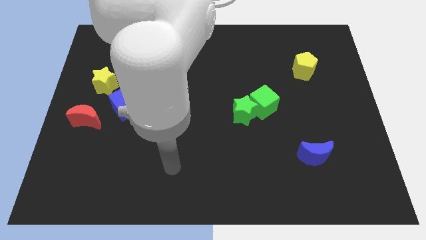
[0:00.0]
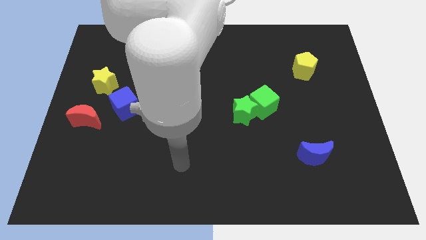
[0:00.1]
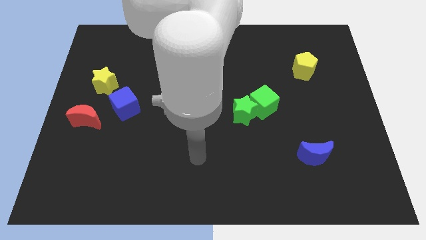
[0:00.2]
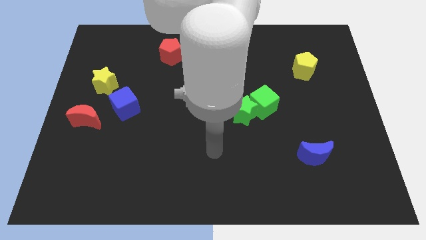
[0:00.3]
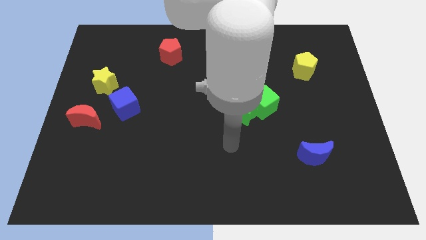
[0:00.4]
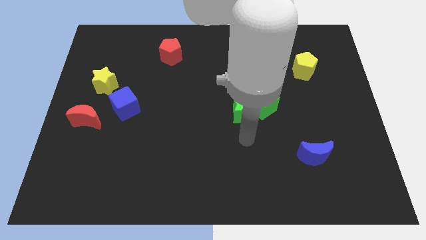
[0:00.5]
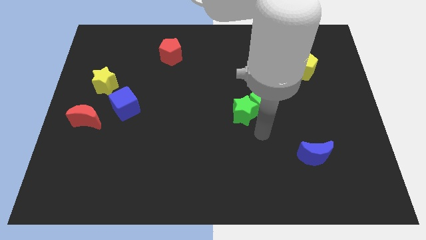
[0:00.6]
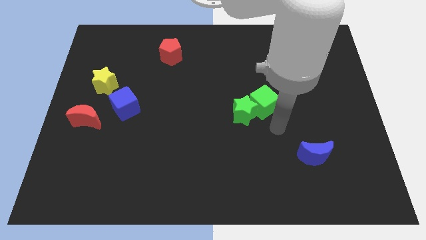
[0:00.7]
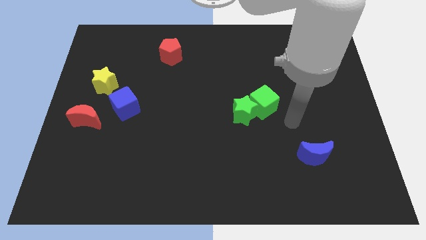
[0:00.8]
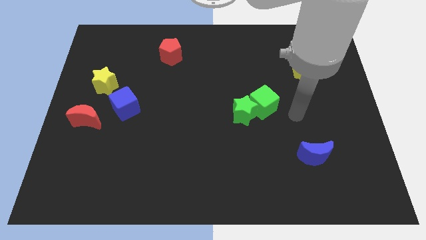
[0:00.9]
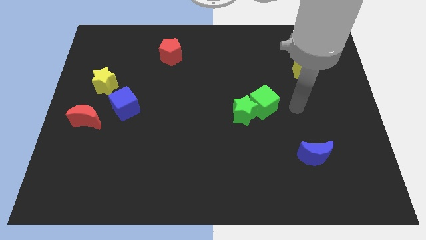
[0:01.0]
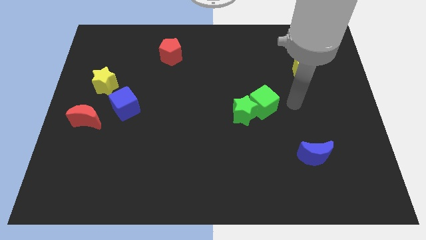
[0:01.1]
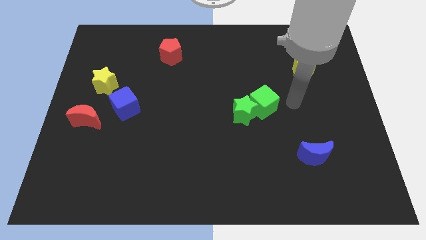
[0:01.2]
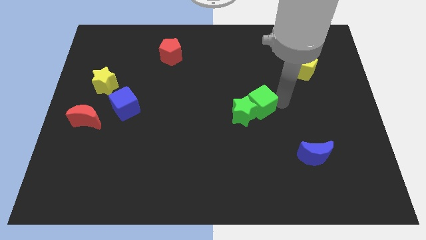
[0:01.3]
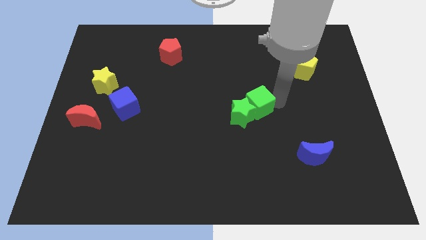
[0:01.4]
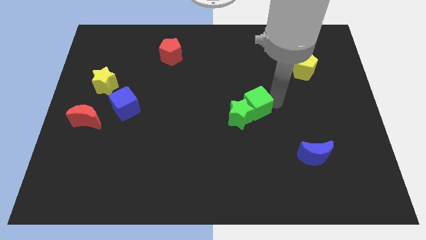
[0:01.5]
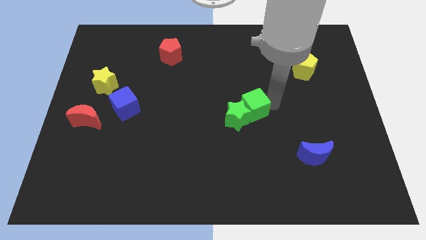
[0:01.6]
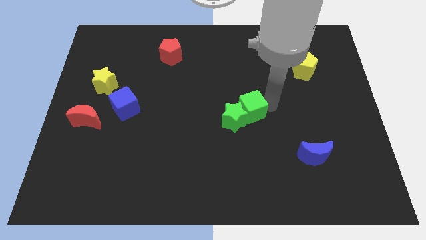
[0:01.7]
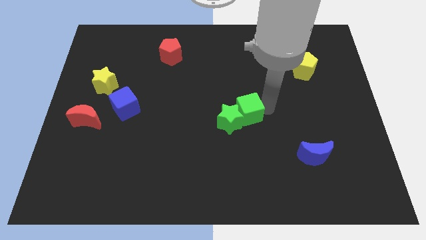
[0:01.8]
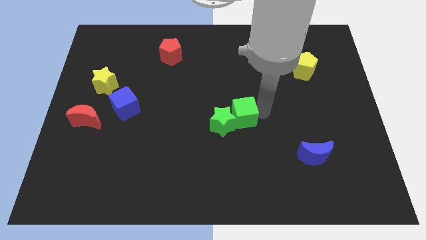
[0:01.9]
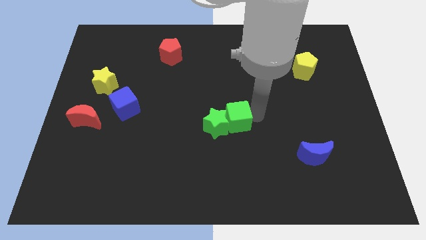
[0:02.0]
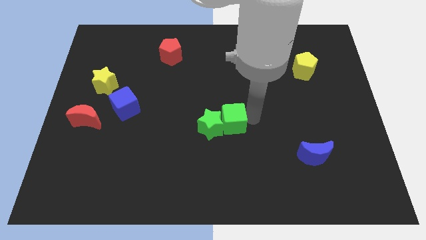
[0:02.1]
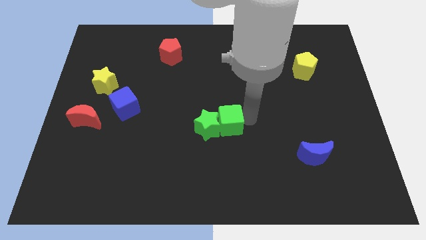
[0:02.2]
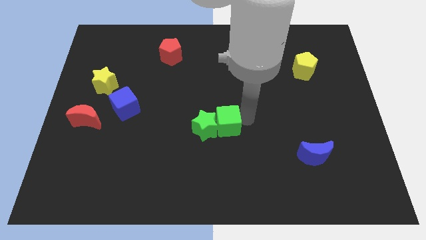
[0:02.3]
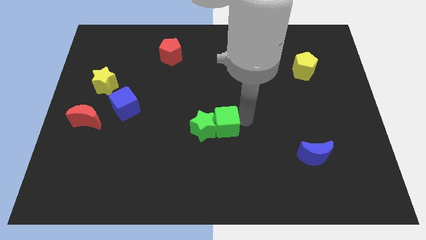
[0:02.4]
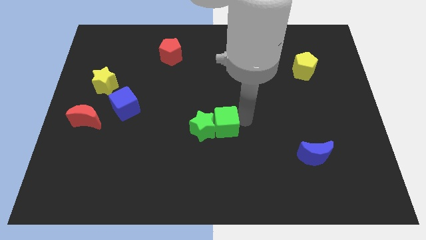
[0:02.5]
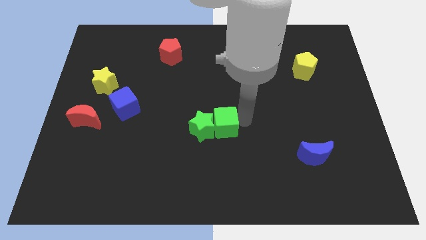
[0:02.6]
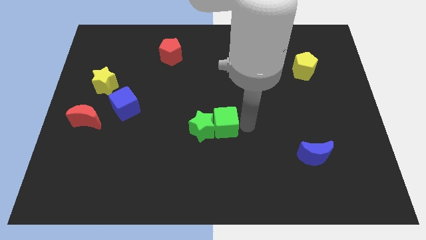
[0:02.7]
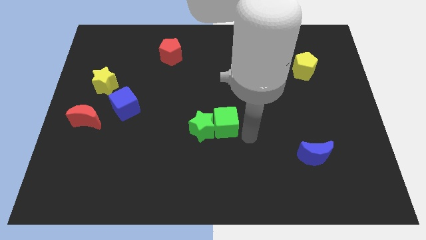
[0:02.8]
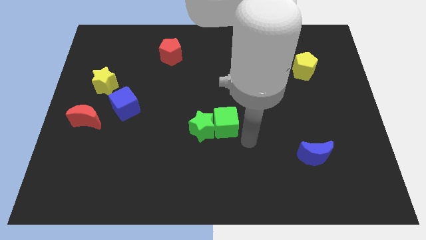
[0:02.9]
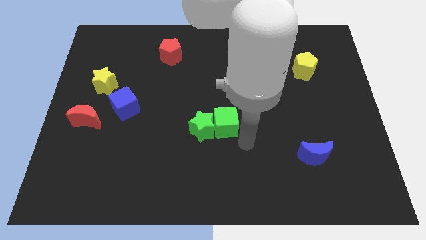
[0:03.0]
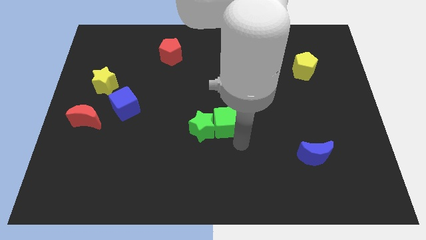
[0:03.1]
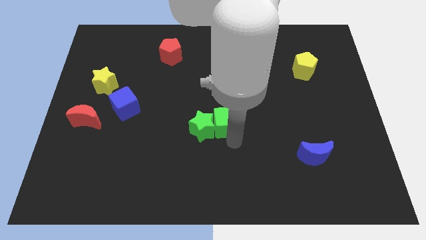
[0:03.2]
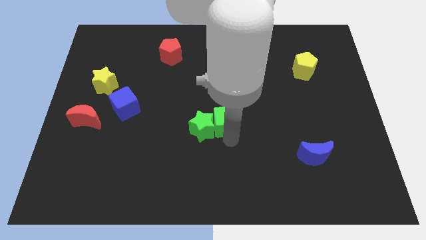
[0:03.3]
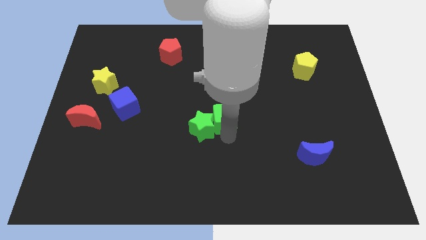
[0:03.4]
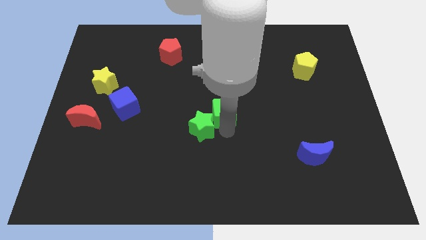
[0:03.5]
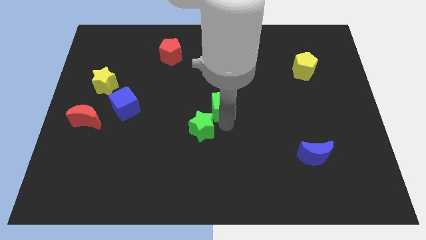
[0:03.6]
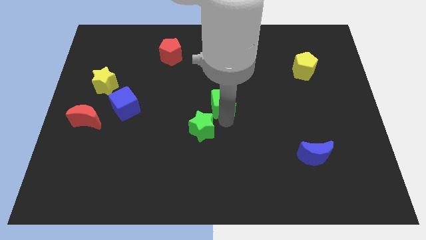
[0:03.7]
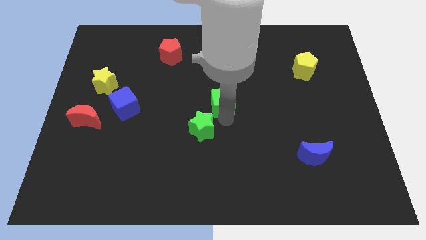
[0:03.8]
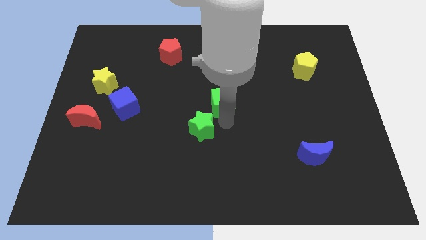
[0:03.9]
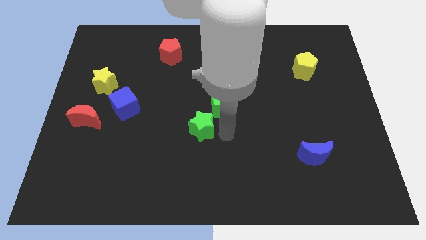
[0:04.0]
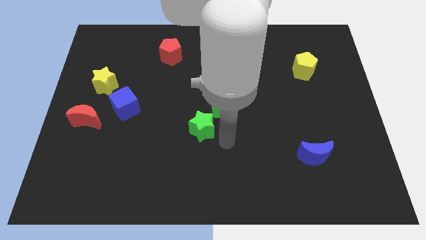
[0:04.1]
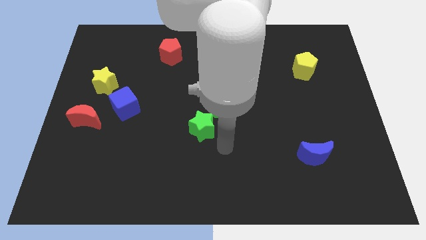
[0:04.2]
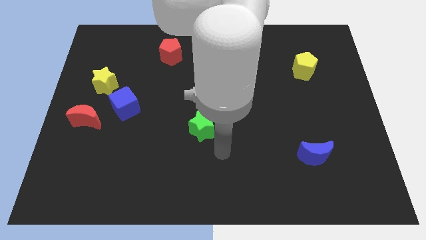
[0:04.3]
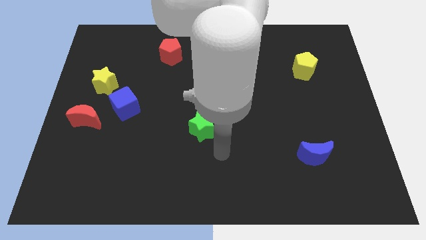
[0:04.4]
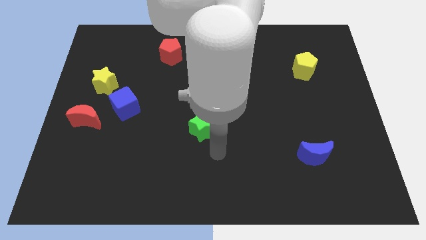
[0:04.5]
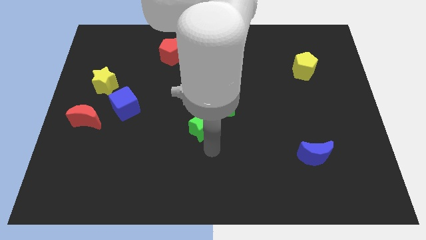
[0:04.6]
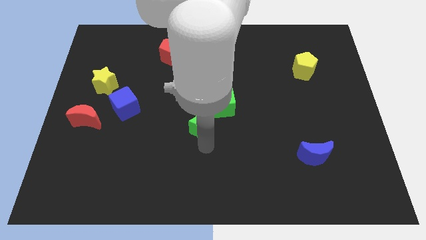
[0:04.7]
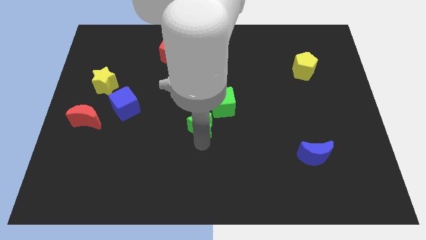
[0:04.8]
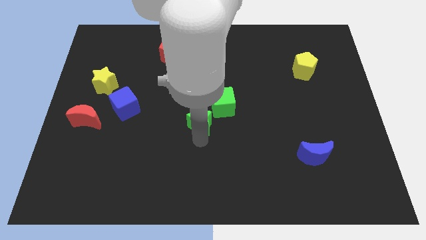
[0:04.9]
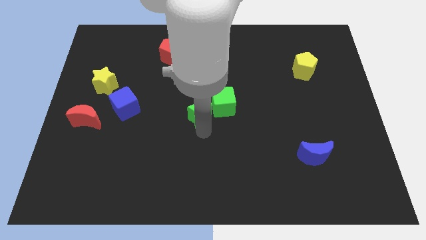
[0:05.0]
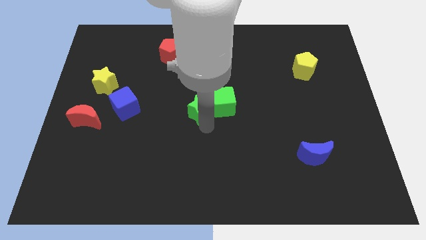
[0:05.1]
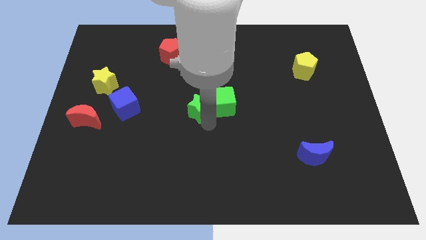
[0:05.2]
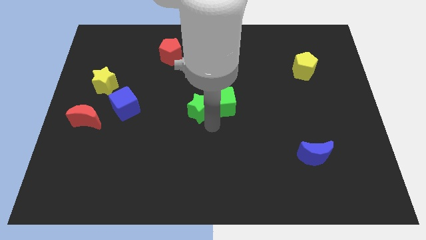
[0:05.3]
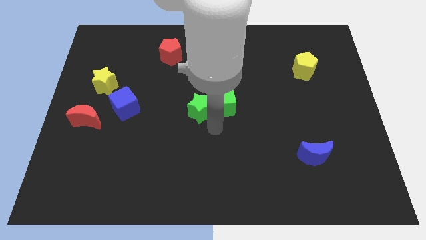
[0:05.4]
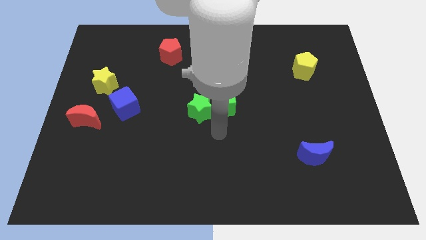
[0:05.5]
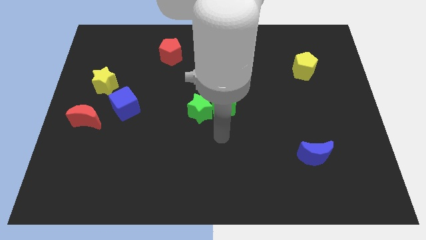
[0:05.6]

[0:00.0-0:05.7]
move both green blocks to the center of the board

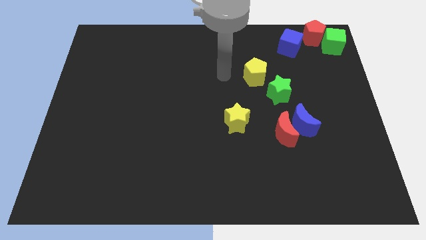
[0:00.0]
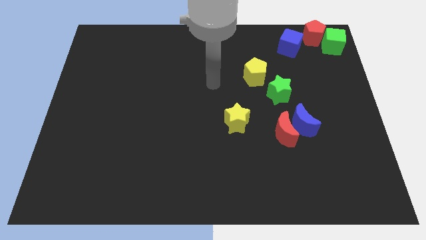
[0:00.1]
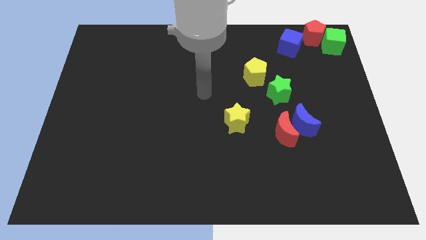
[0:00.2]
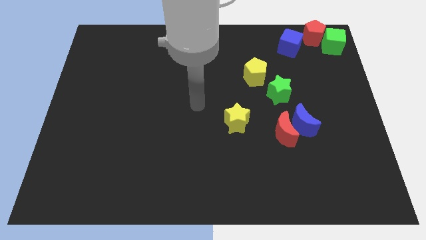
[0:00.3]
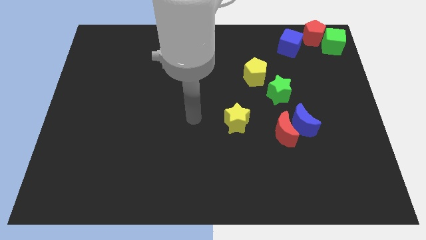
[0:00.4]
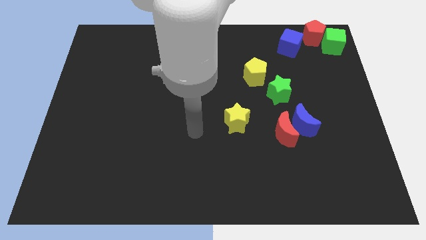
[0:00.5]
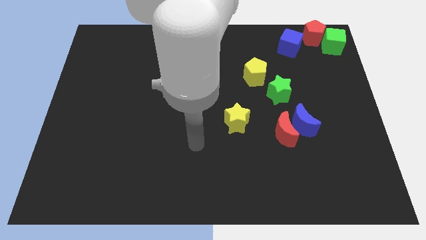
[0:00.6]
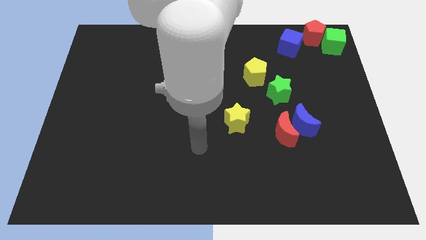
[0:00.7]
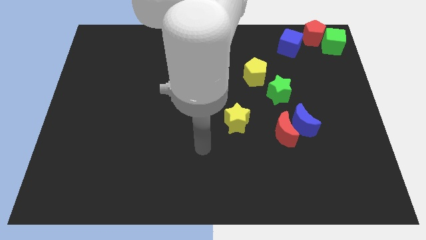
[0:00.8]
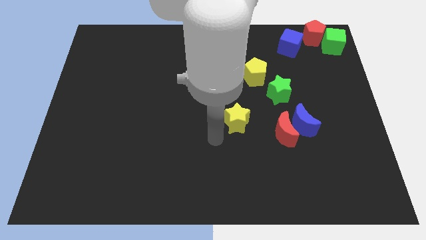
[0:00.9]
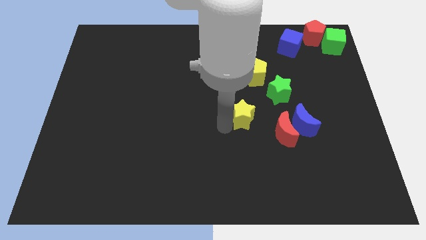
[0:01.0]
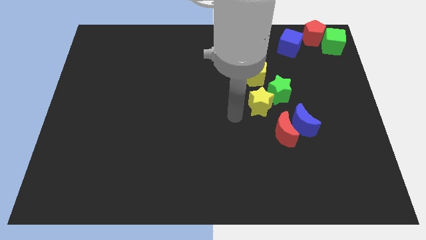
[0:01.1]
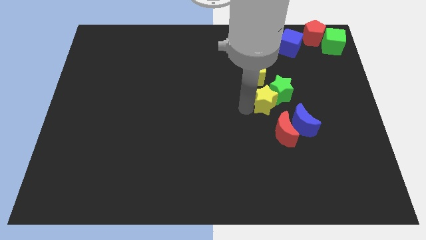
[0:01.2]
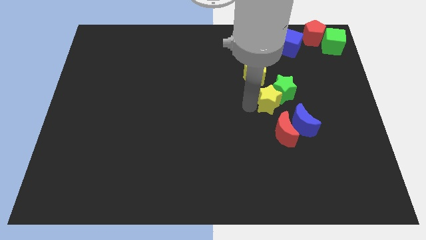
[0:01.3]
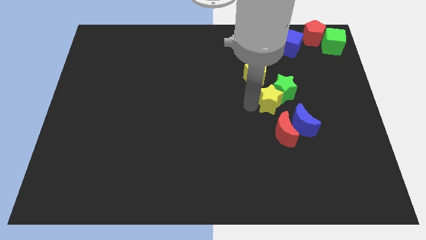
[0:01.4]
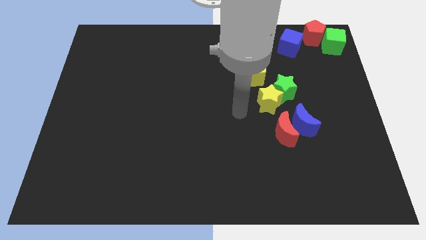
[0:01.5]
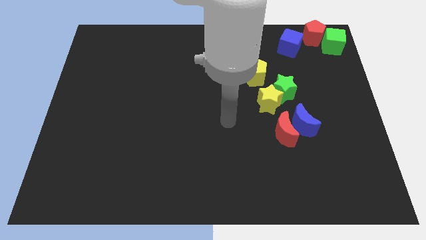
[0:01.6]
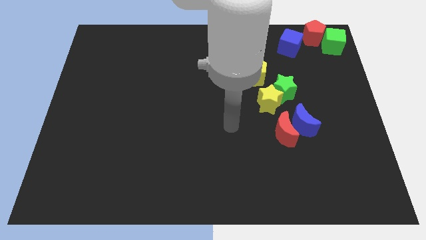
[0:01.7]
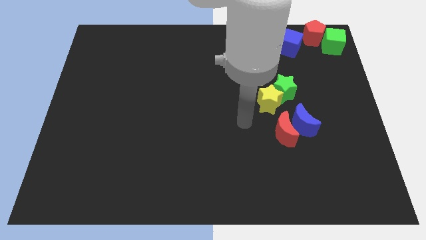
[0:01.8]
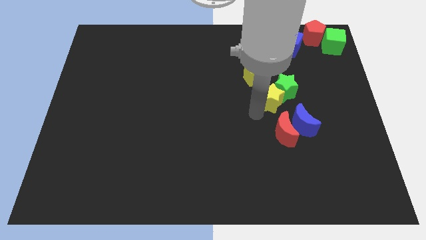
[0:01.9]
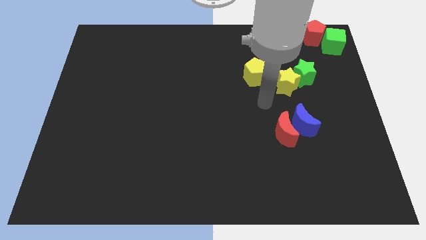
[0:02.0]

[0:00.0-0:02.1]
add yellow star into green star

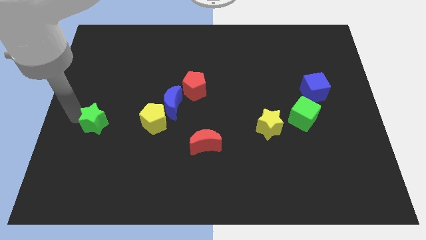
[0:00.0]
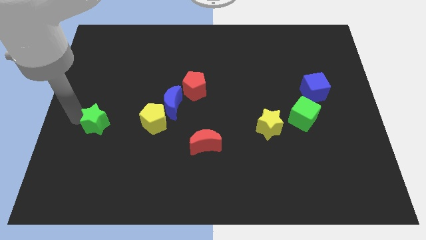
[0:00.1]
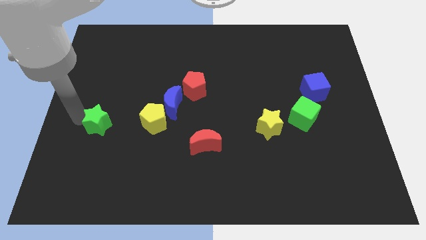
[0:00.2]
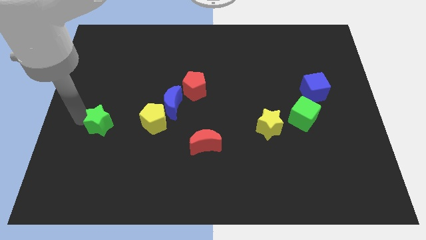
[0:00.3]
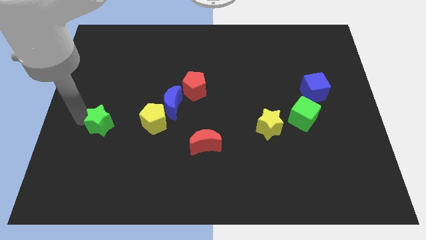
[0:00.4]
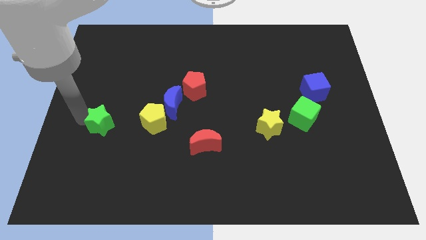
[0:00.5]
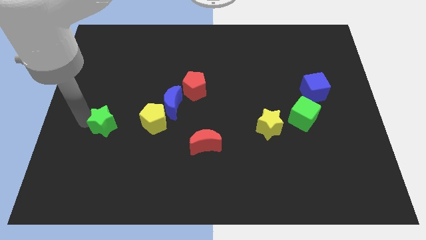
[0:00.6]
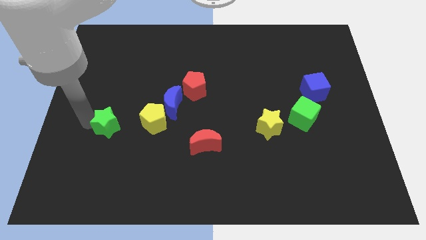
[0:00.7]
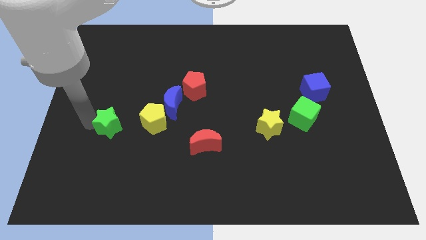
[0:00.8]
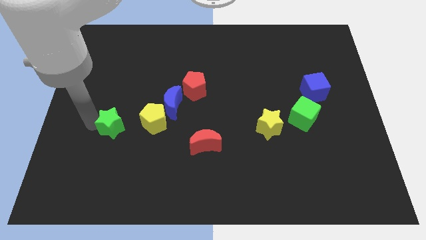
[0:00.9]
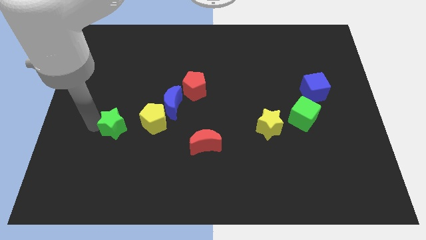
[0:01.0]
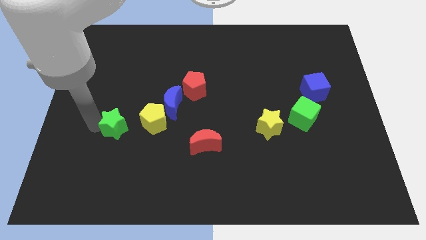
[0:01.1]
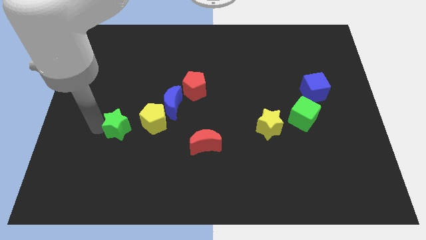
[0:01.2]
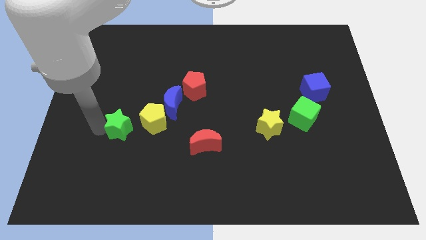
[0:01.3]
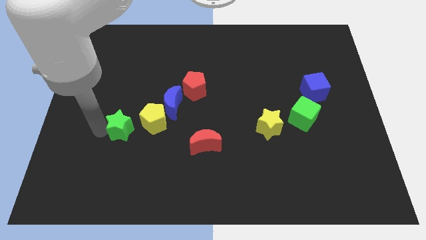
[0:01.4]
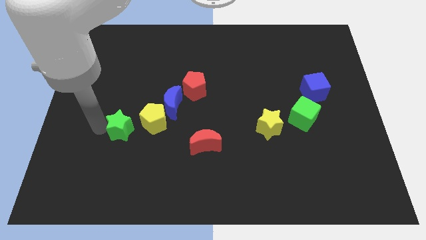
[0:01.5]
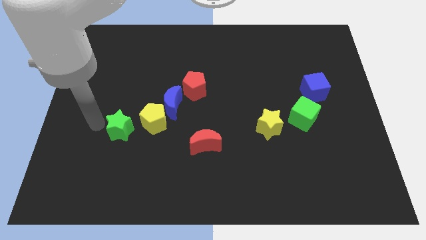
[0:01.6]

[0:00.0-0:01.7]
push the green star towards the yellow pentagon
